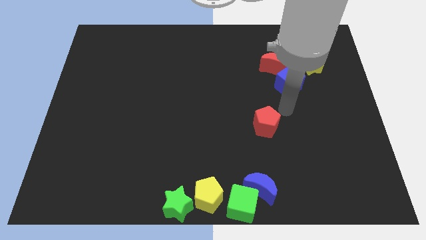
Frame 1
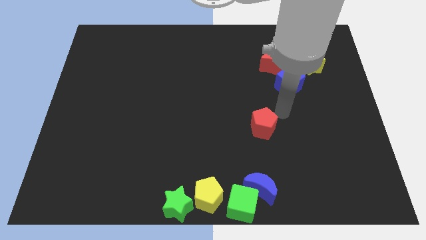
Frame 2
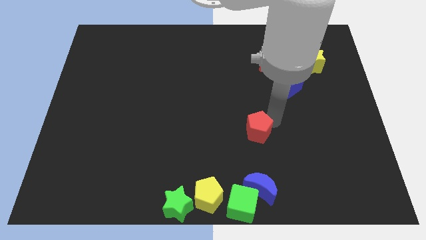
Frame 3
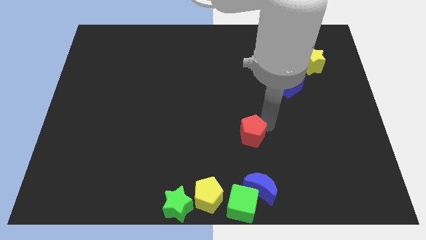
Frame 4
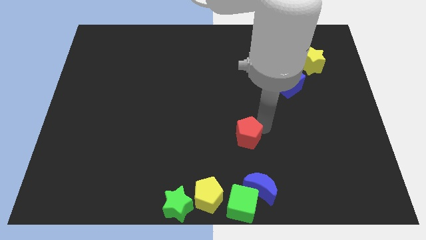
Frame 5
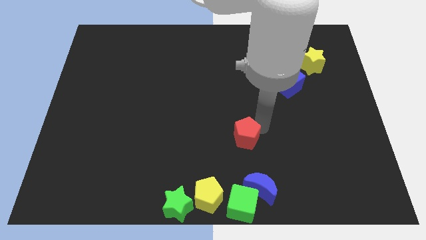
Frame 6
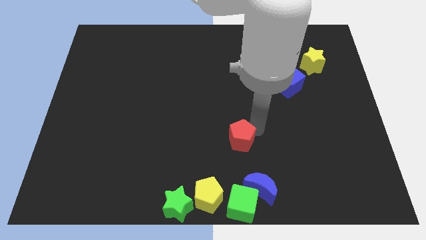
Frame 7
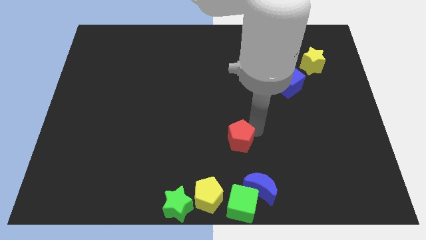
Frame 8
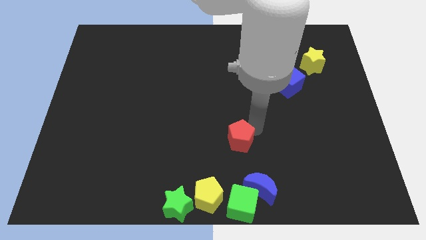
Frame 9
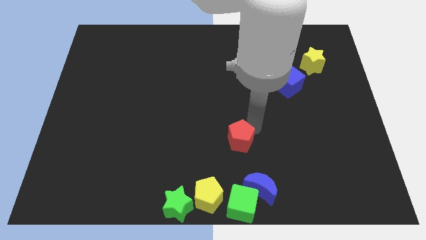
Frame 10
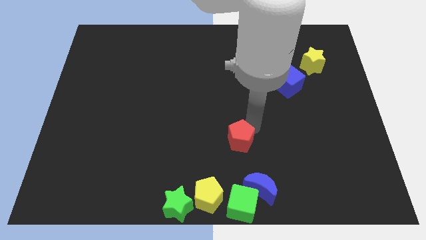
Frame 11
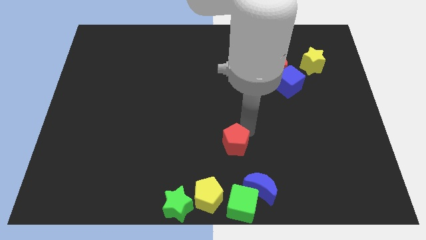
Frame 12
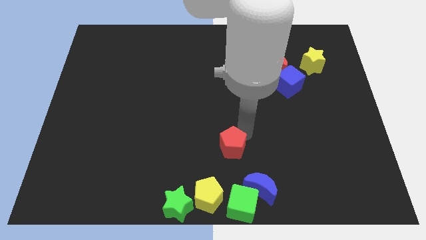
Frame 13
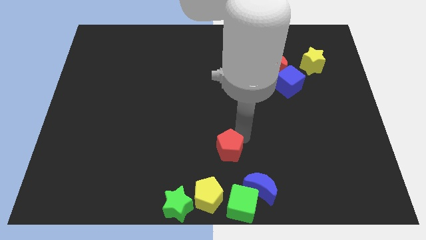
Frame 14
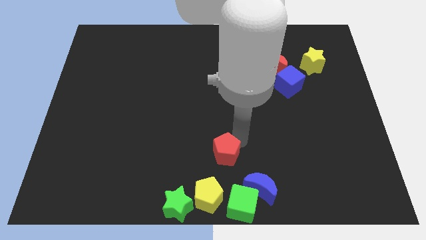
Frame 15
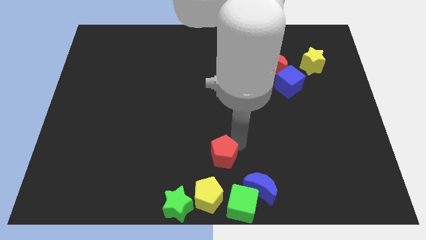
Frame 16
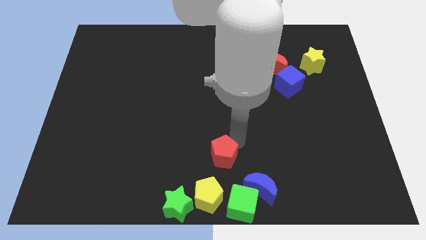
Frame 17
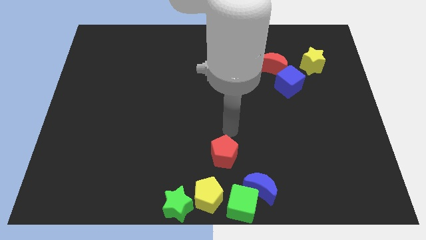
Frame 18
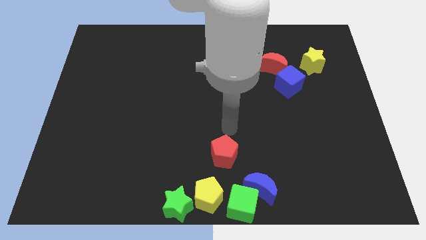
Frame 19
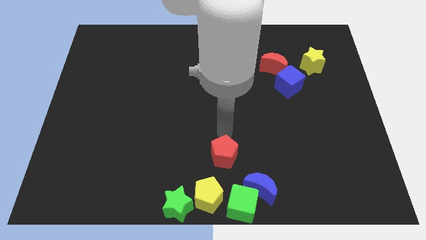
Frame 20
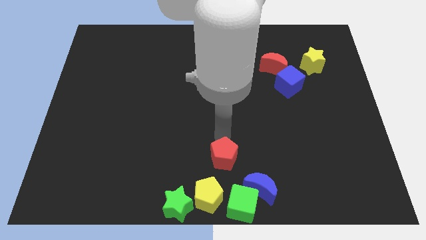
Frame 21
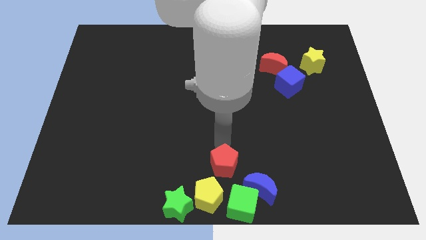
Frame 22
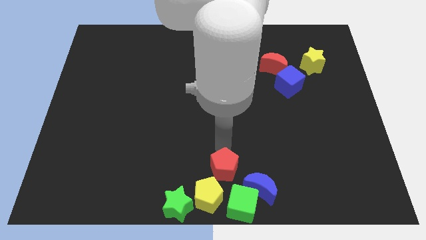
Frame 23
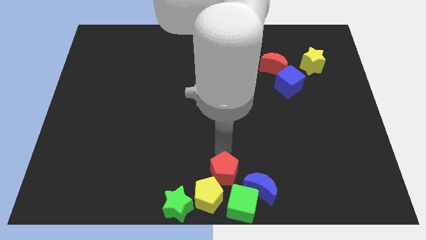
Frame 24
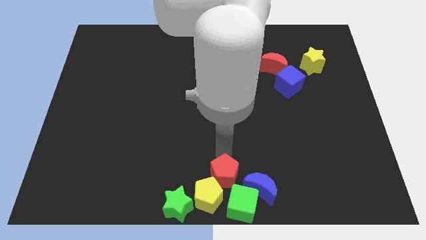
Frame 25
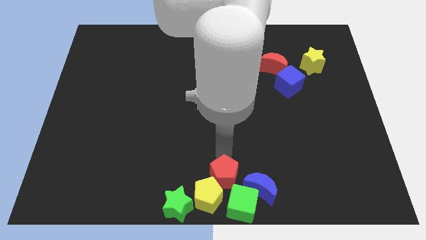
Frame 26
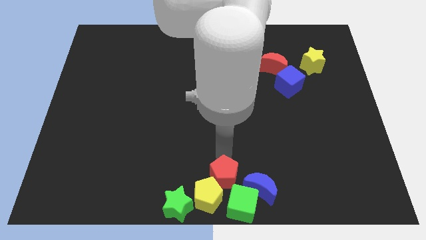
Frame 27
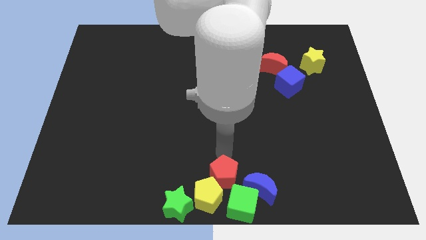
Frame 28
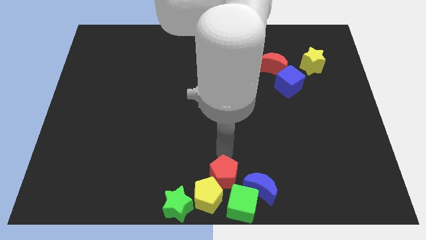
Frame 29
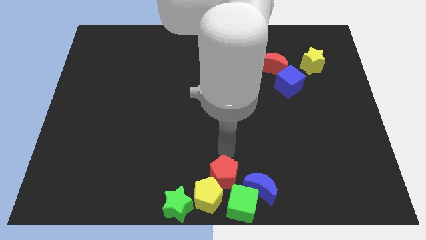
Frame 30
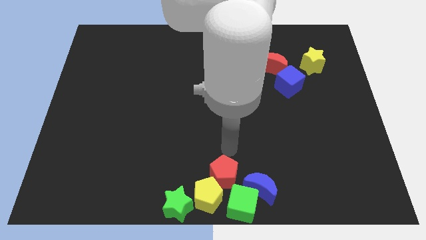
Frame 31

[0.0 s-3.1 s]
slide the red pentagon into the yellow pentagon

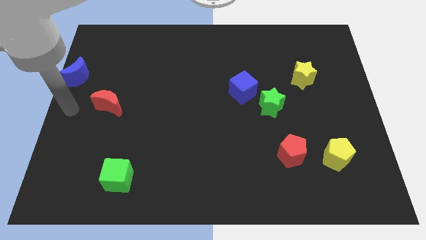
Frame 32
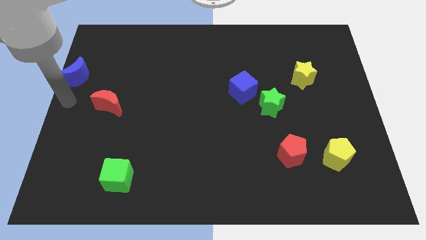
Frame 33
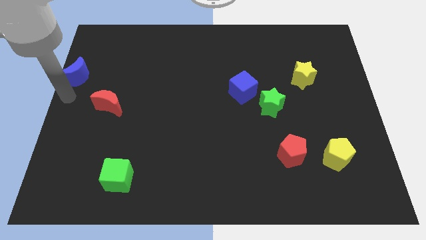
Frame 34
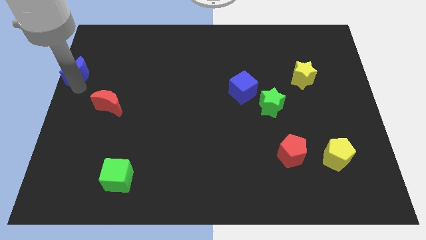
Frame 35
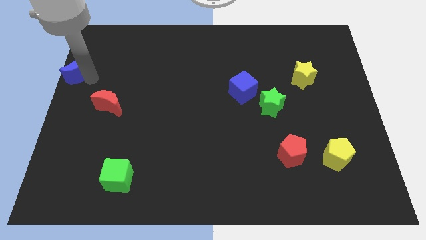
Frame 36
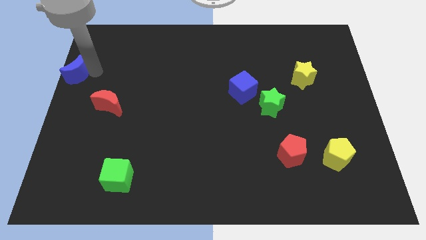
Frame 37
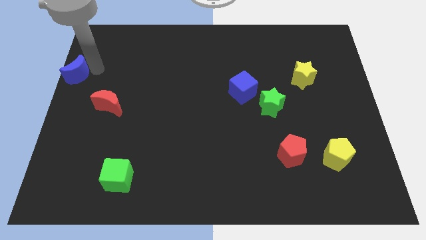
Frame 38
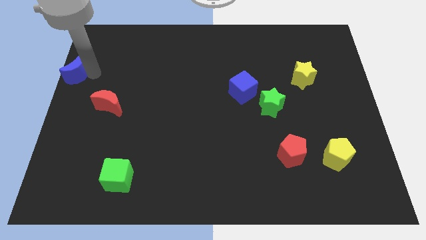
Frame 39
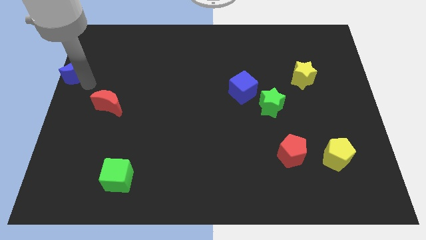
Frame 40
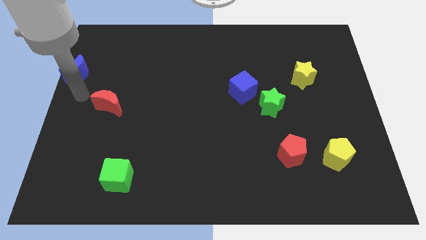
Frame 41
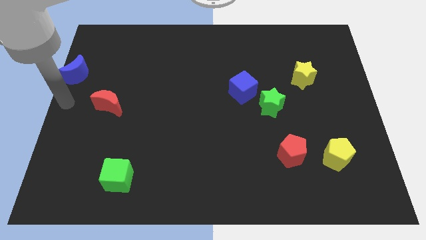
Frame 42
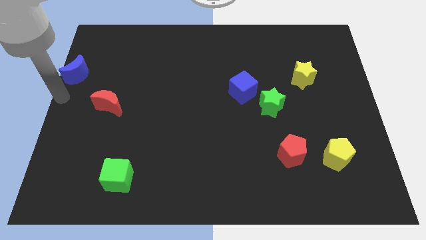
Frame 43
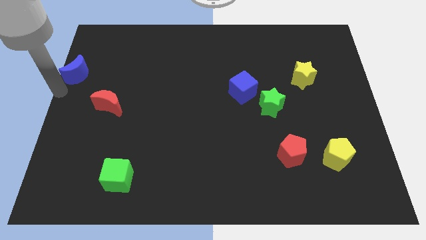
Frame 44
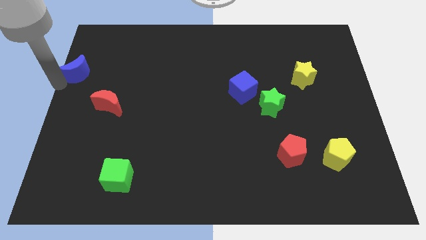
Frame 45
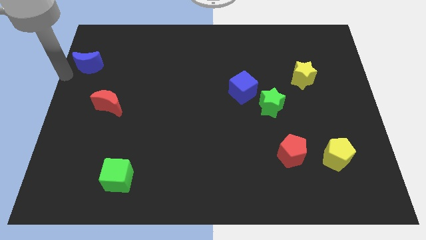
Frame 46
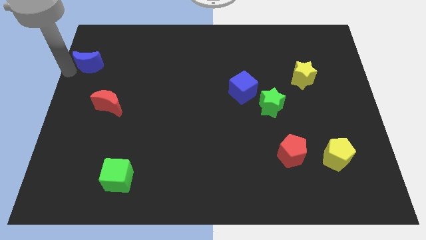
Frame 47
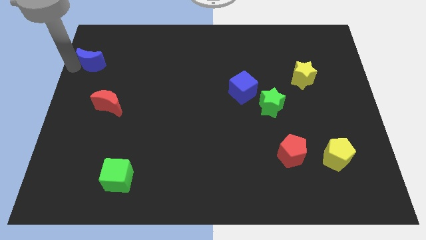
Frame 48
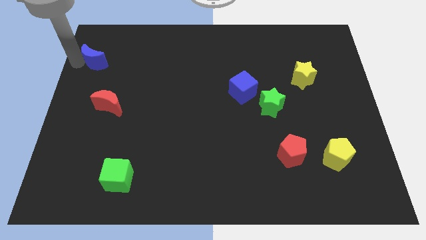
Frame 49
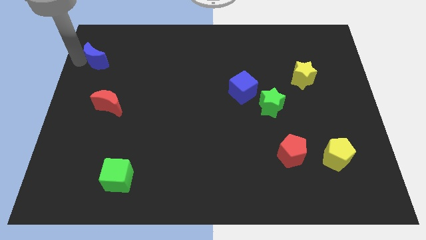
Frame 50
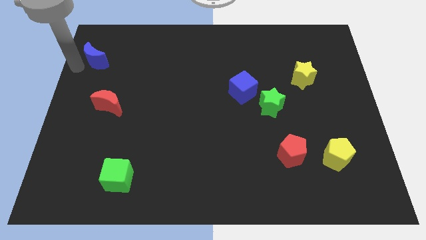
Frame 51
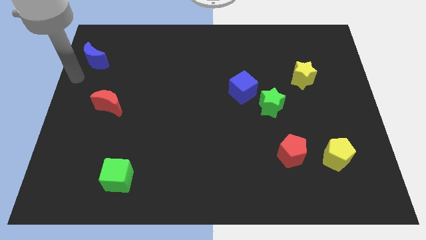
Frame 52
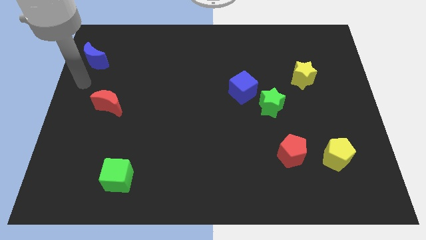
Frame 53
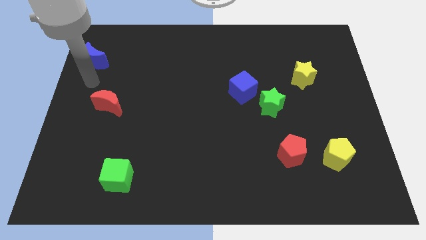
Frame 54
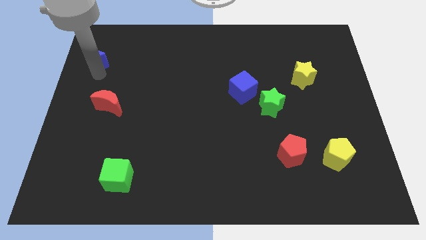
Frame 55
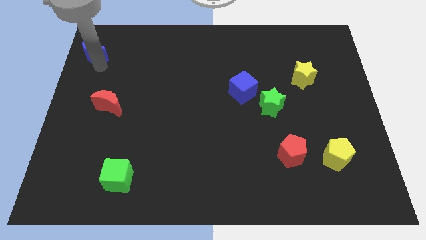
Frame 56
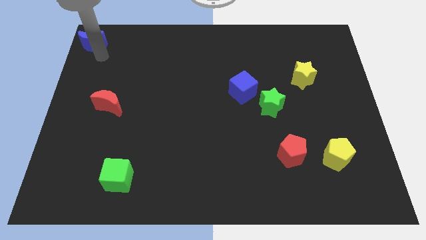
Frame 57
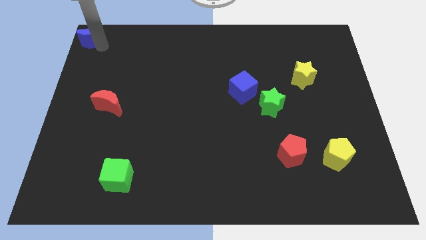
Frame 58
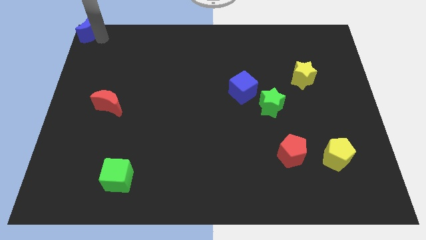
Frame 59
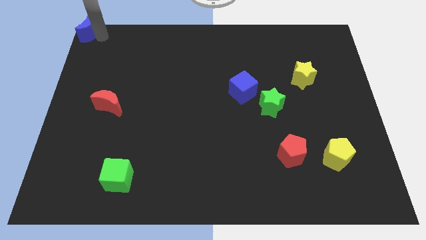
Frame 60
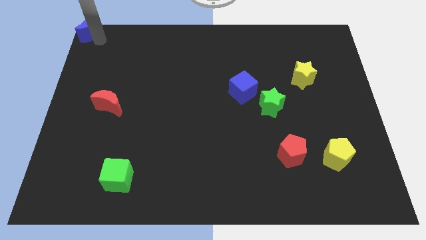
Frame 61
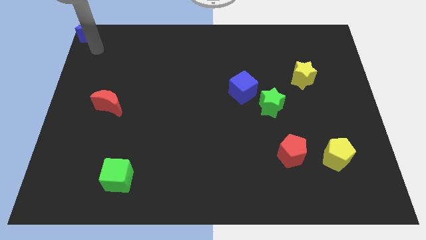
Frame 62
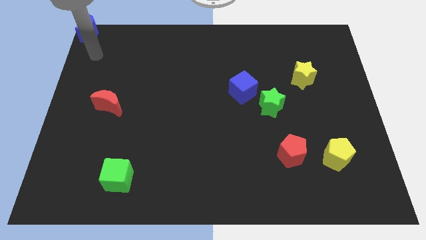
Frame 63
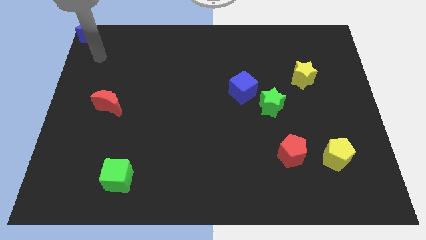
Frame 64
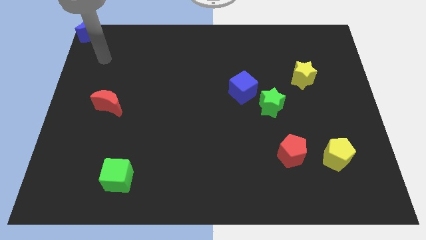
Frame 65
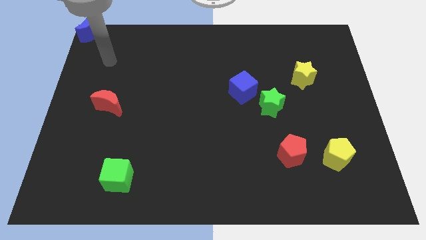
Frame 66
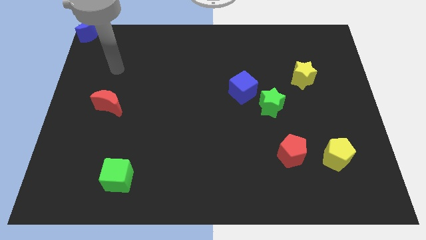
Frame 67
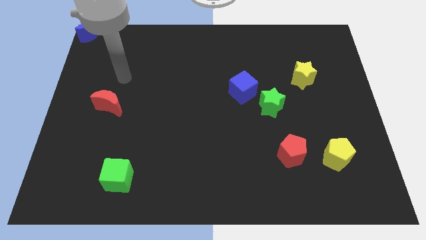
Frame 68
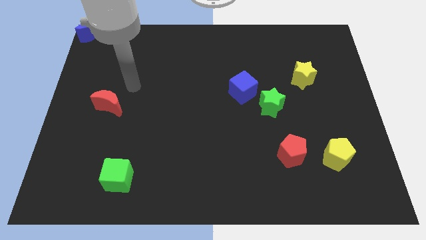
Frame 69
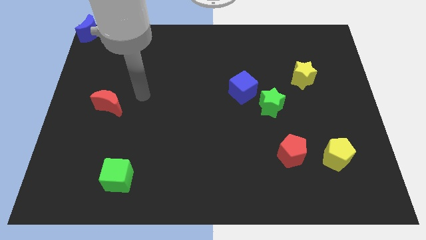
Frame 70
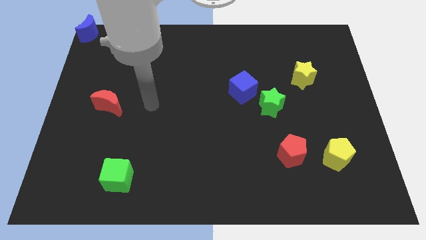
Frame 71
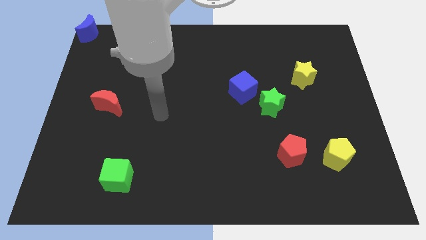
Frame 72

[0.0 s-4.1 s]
place blue moon to the top left

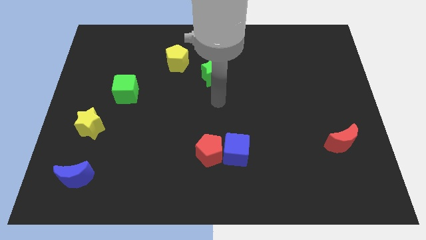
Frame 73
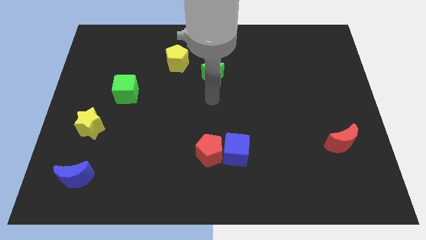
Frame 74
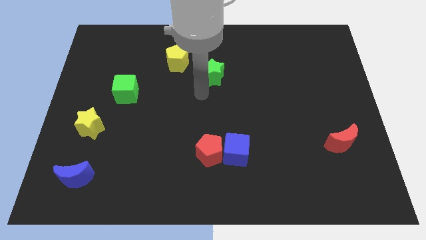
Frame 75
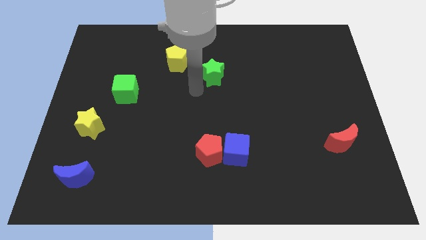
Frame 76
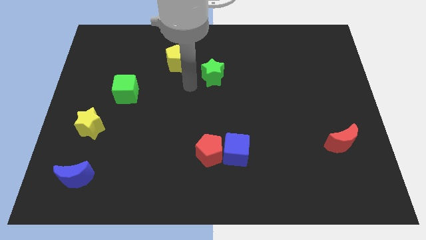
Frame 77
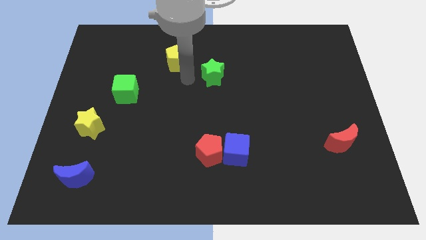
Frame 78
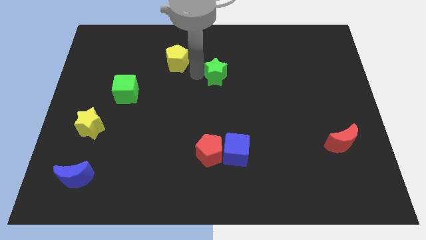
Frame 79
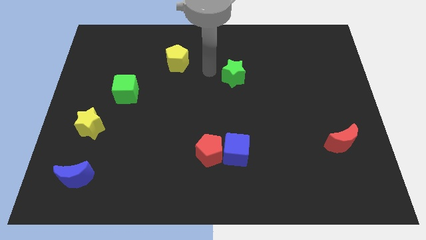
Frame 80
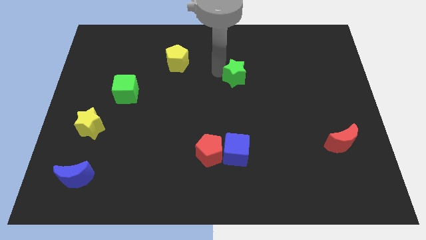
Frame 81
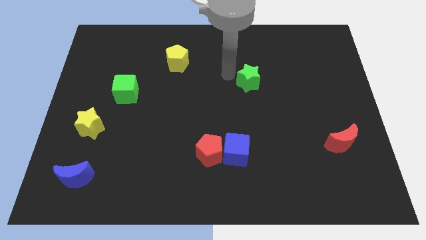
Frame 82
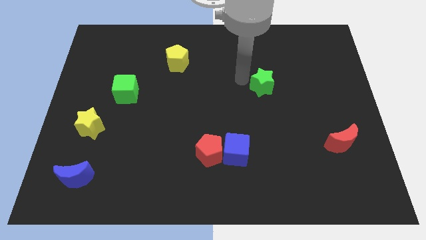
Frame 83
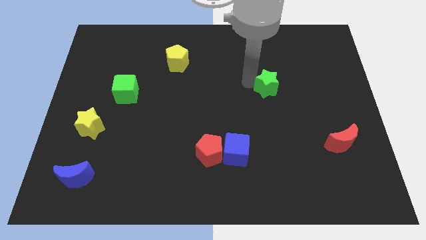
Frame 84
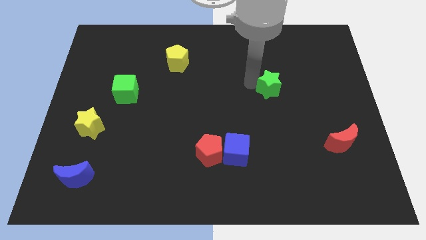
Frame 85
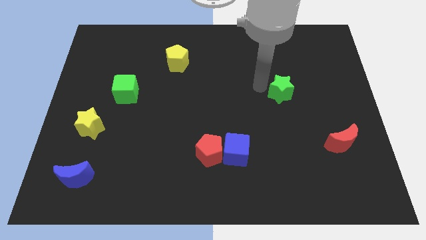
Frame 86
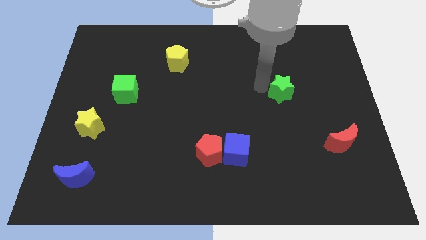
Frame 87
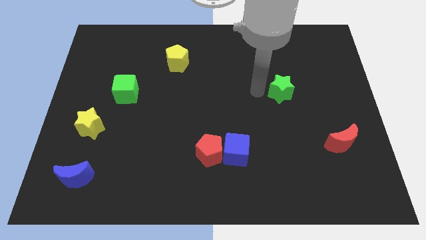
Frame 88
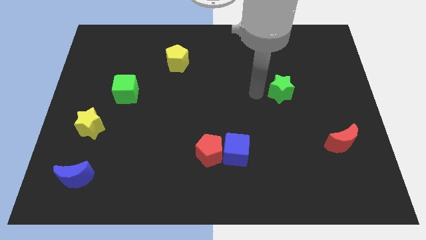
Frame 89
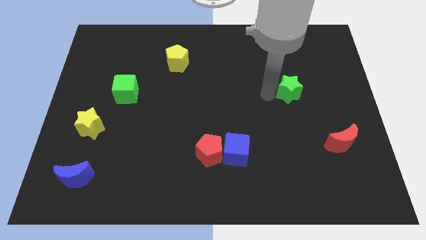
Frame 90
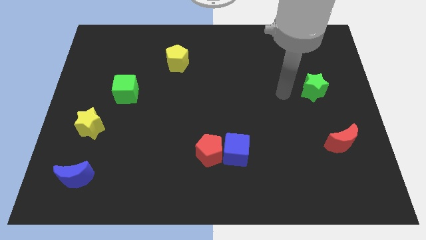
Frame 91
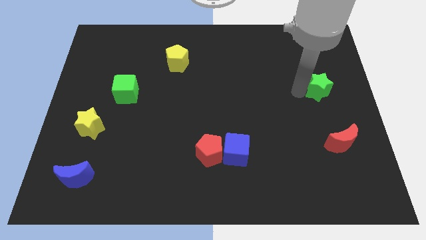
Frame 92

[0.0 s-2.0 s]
push the green star towards the top of the red crescent
